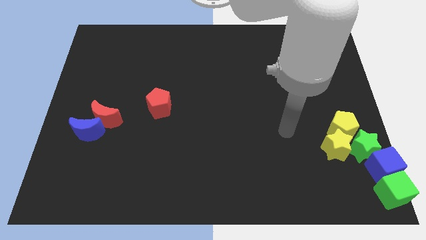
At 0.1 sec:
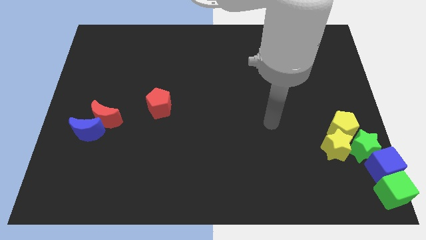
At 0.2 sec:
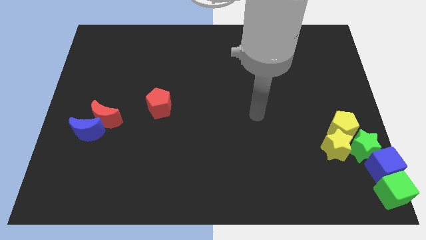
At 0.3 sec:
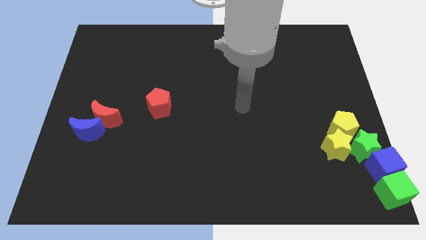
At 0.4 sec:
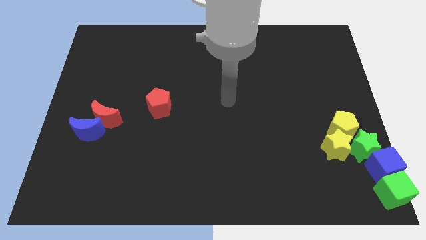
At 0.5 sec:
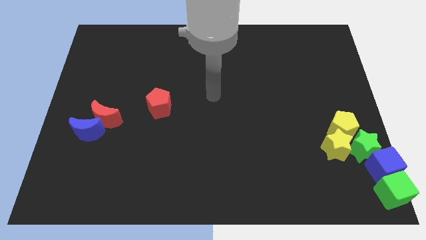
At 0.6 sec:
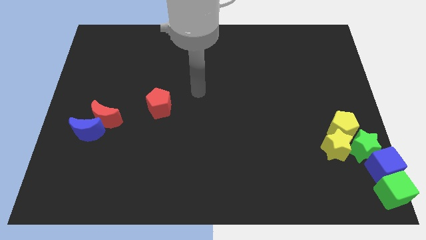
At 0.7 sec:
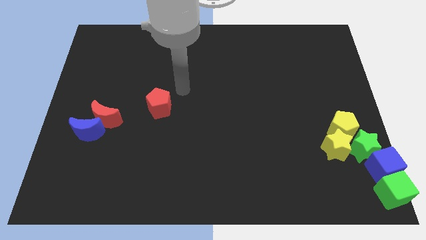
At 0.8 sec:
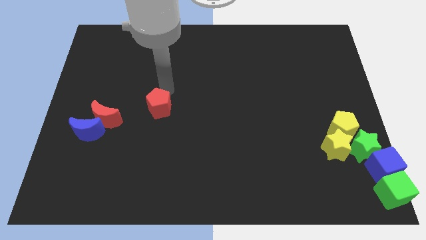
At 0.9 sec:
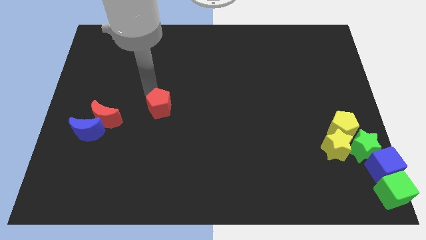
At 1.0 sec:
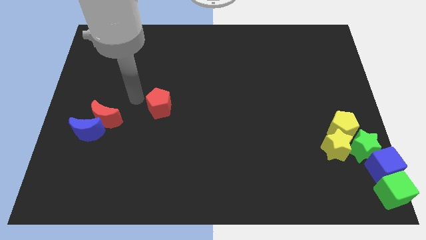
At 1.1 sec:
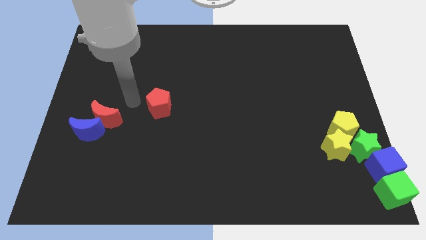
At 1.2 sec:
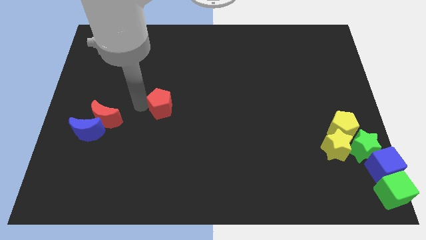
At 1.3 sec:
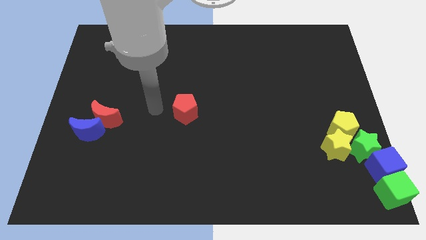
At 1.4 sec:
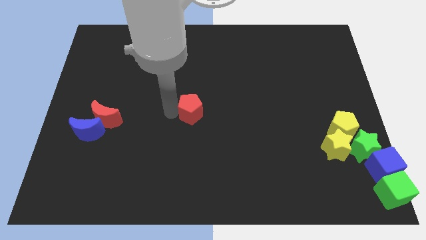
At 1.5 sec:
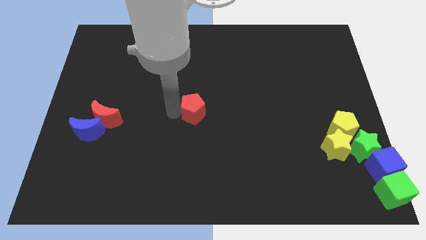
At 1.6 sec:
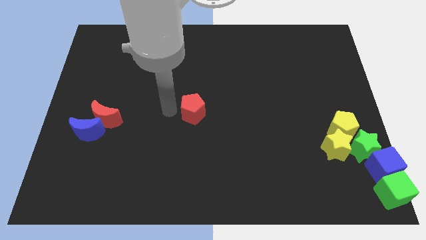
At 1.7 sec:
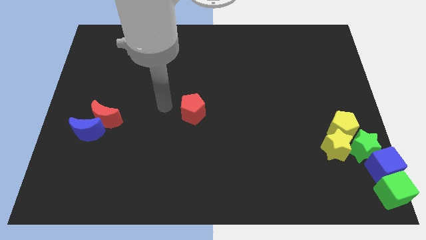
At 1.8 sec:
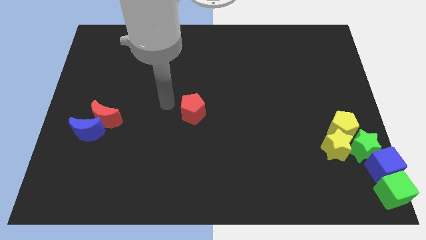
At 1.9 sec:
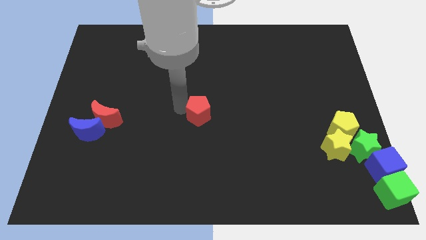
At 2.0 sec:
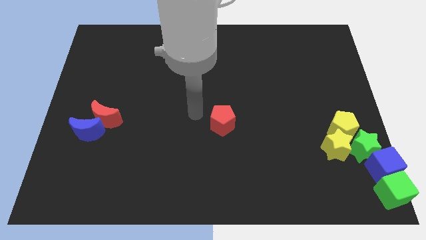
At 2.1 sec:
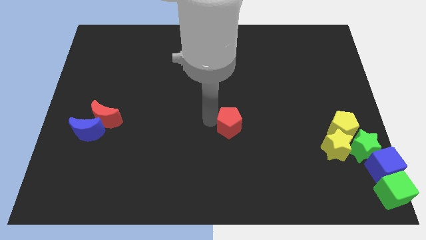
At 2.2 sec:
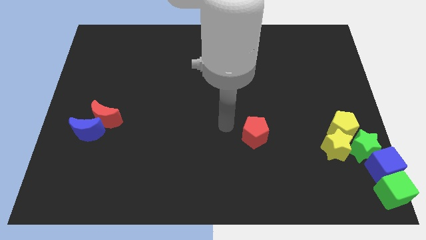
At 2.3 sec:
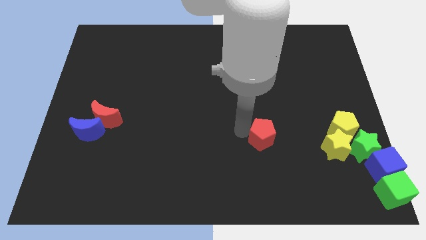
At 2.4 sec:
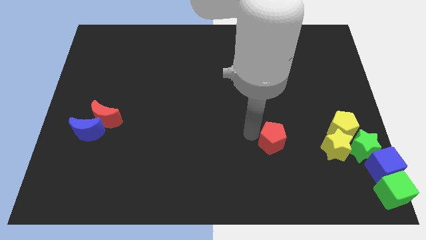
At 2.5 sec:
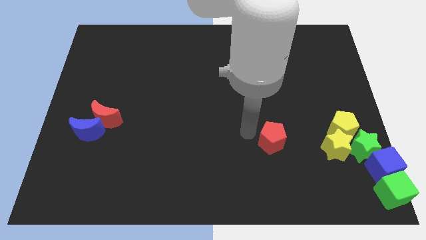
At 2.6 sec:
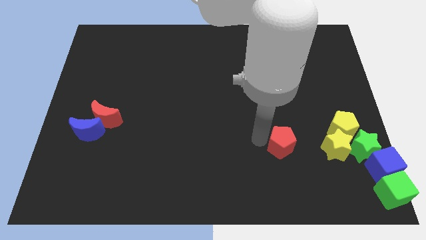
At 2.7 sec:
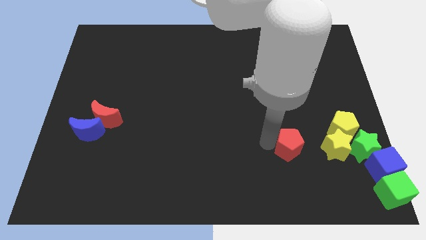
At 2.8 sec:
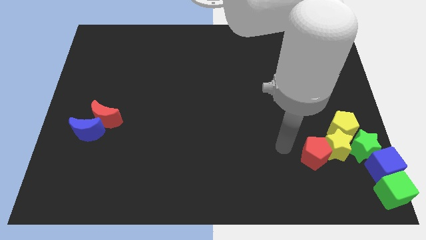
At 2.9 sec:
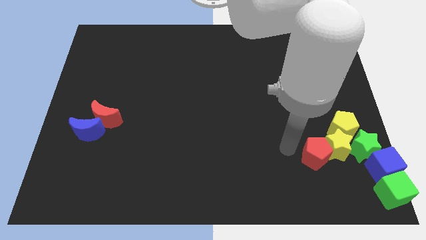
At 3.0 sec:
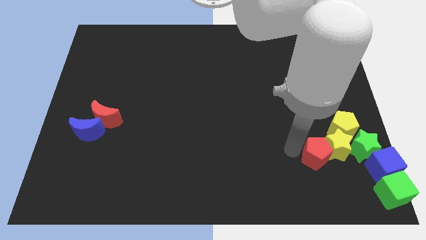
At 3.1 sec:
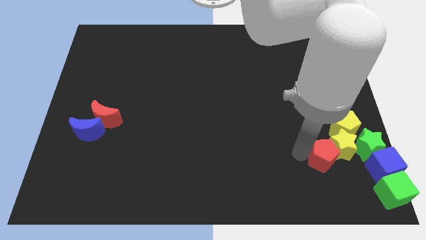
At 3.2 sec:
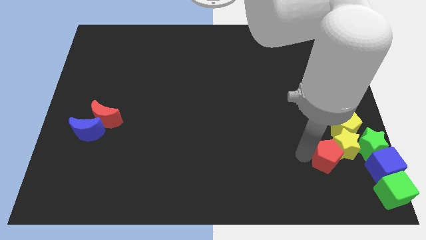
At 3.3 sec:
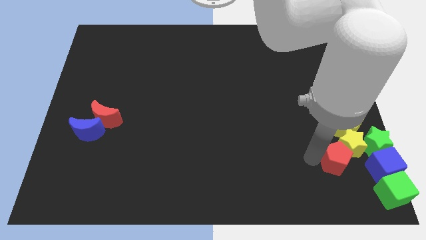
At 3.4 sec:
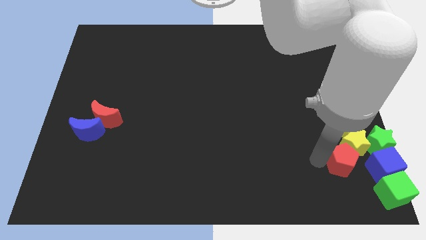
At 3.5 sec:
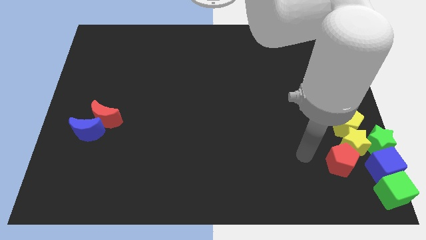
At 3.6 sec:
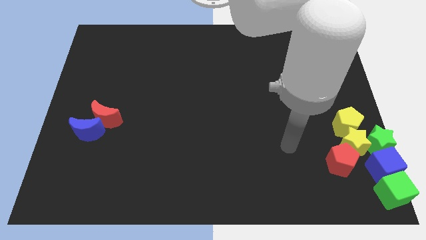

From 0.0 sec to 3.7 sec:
move the red pentagon to the bottom left of the yellow star

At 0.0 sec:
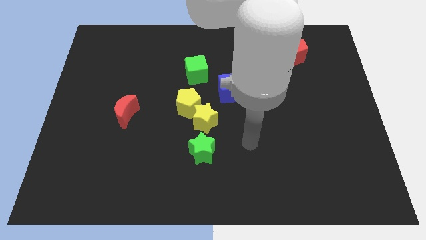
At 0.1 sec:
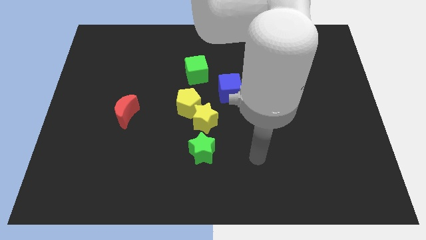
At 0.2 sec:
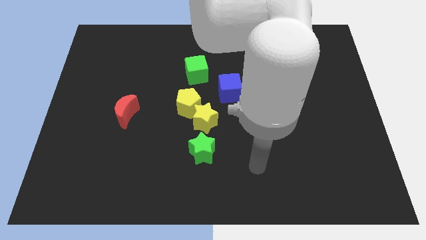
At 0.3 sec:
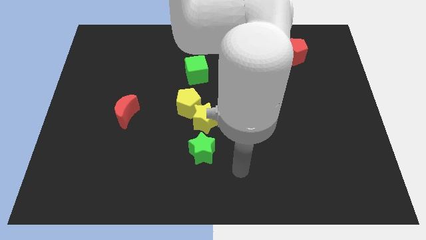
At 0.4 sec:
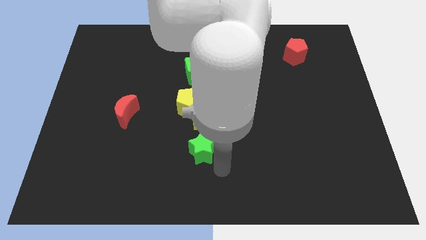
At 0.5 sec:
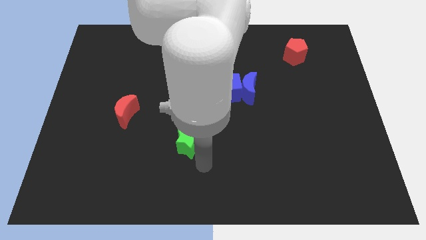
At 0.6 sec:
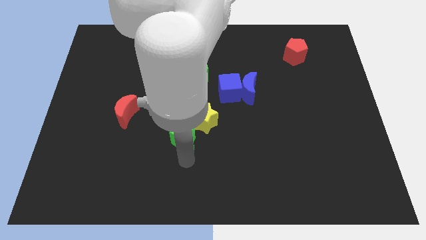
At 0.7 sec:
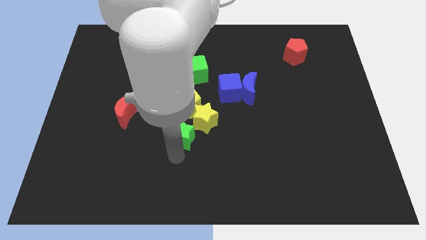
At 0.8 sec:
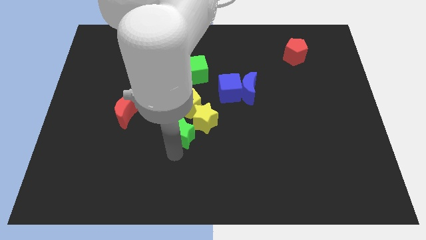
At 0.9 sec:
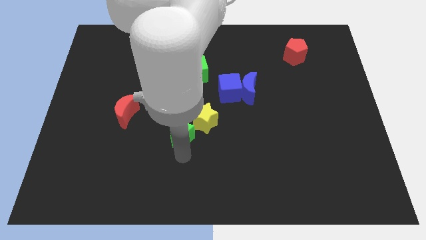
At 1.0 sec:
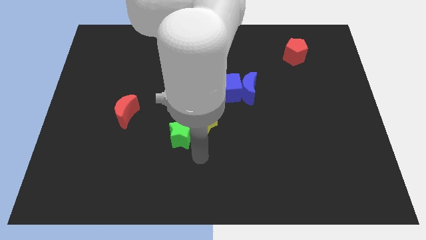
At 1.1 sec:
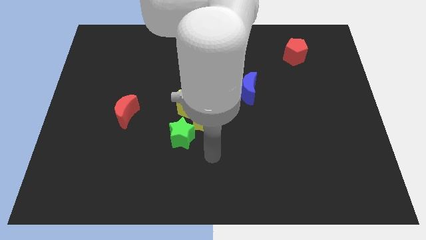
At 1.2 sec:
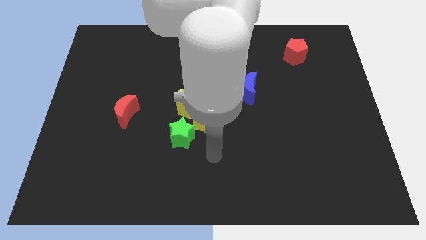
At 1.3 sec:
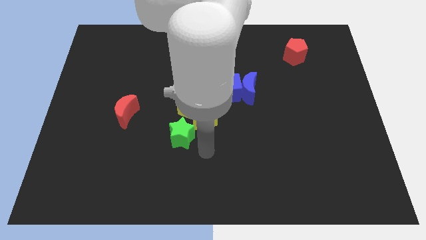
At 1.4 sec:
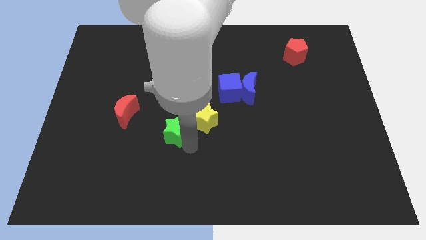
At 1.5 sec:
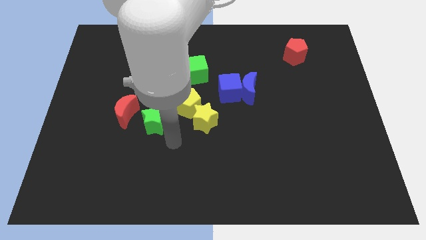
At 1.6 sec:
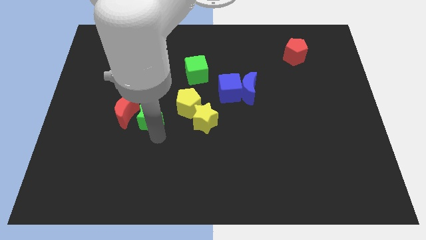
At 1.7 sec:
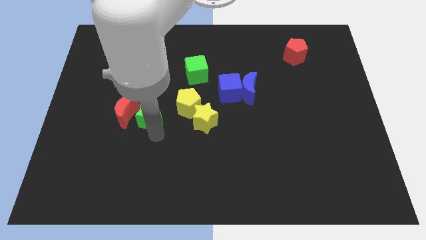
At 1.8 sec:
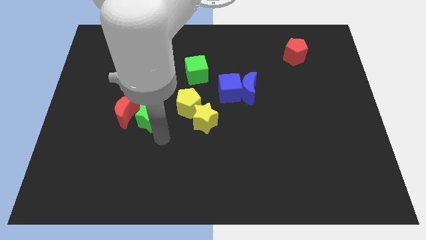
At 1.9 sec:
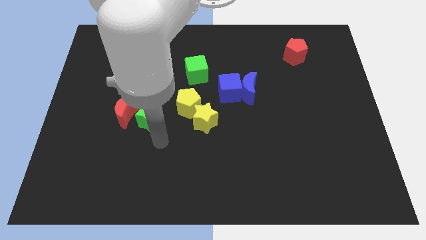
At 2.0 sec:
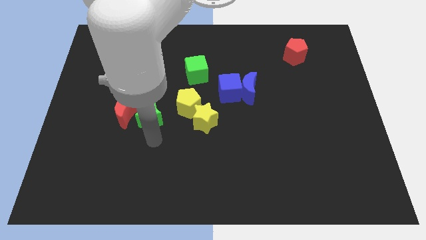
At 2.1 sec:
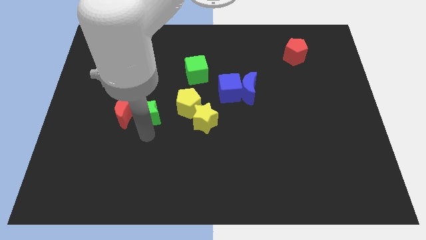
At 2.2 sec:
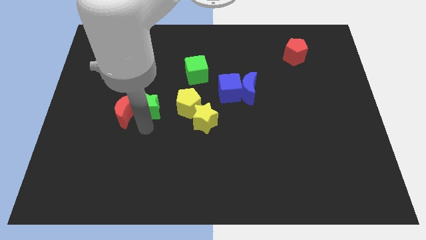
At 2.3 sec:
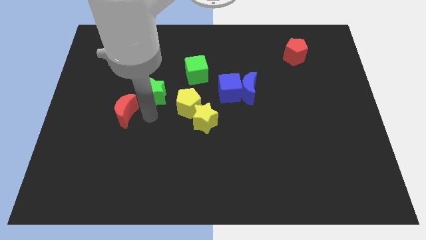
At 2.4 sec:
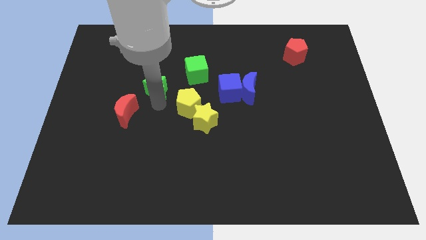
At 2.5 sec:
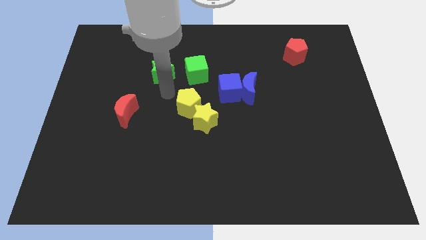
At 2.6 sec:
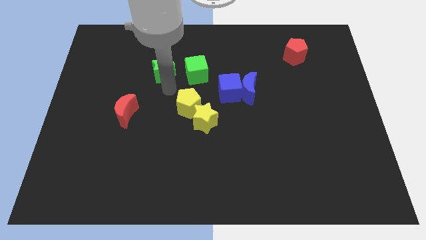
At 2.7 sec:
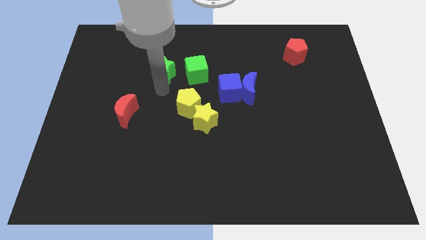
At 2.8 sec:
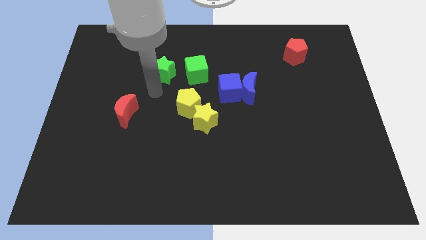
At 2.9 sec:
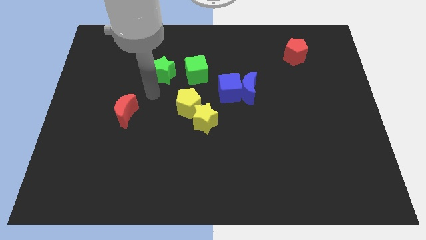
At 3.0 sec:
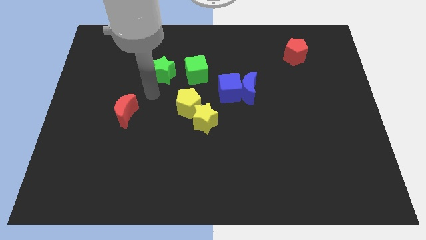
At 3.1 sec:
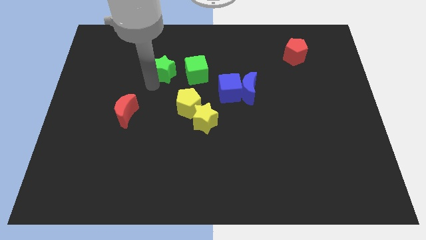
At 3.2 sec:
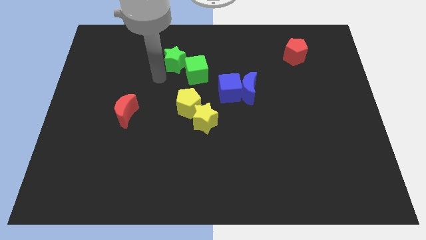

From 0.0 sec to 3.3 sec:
move the green star left to the green cube

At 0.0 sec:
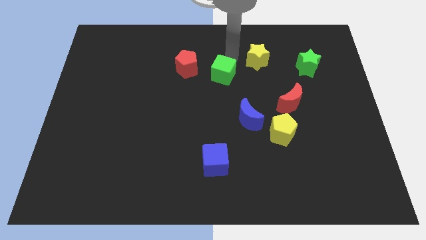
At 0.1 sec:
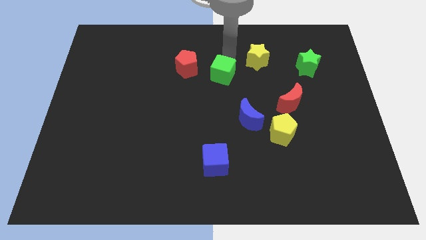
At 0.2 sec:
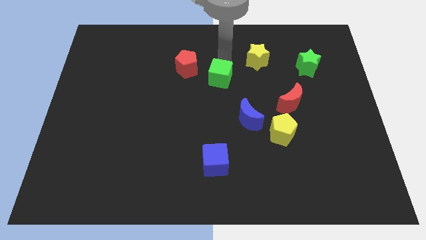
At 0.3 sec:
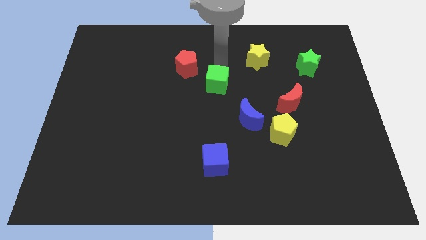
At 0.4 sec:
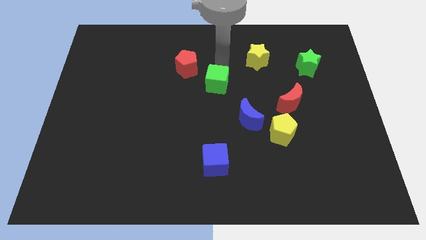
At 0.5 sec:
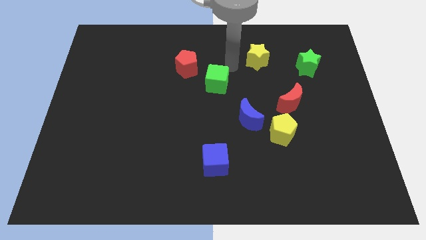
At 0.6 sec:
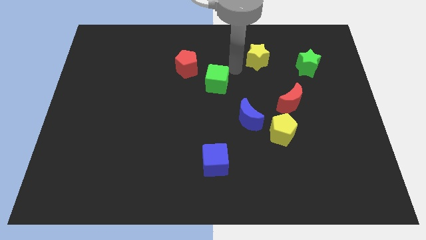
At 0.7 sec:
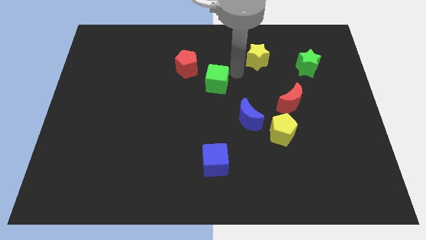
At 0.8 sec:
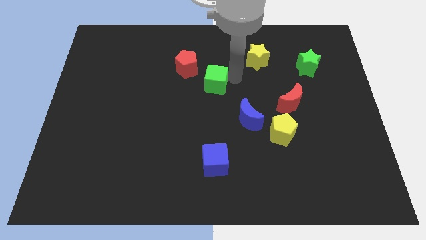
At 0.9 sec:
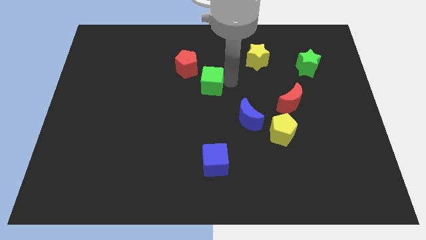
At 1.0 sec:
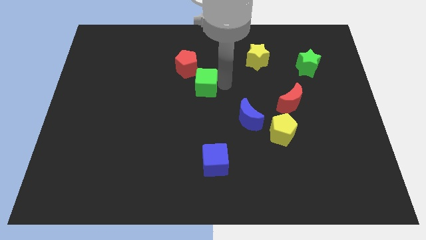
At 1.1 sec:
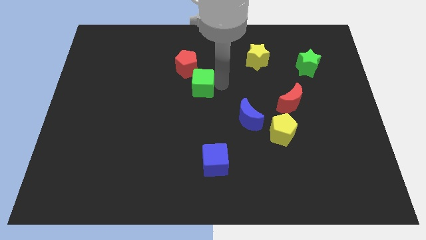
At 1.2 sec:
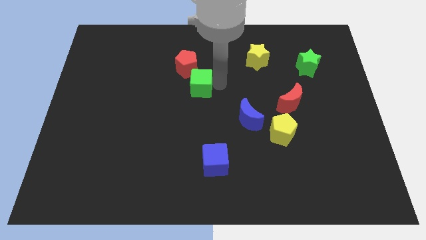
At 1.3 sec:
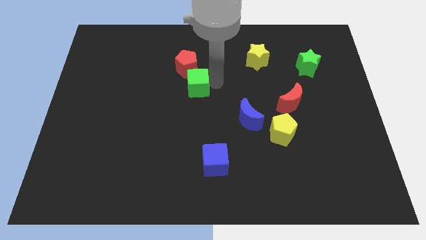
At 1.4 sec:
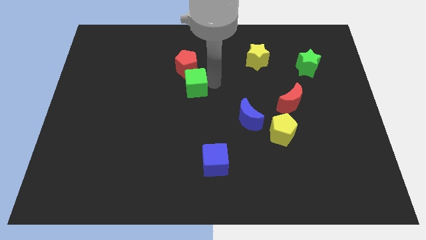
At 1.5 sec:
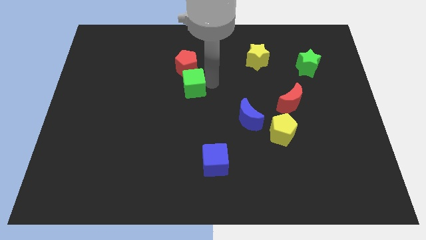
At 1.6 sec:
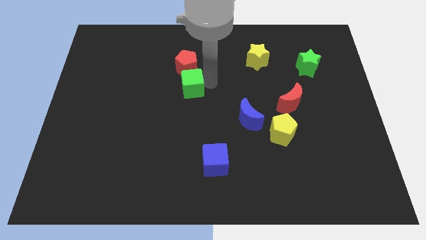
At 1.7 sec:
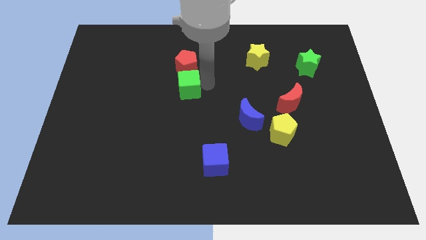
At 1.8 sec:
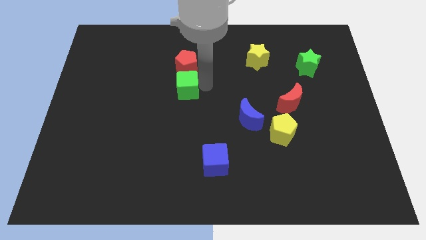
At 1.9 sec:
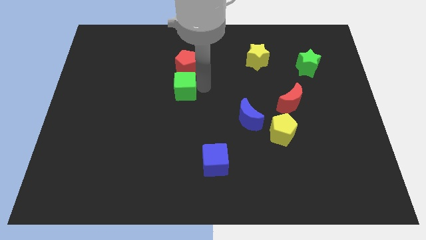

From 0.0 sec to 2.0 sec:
move the green cube below the red pentagon
